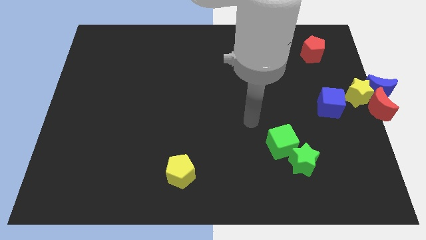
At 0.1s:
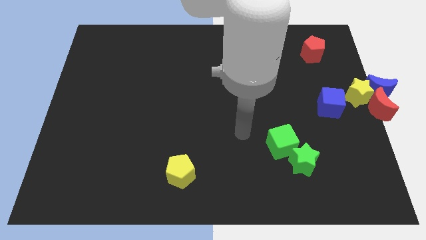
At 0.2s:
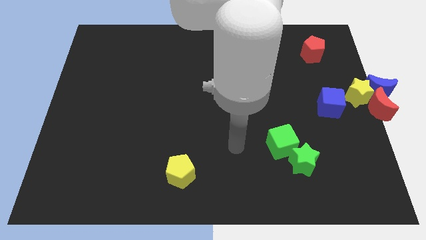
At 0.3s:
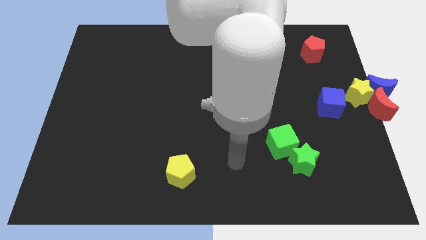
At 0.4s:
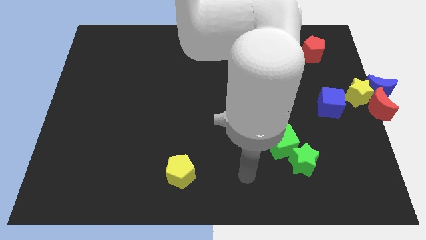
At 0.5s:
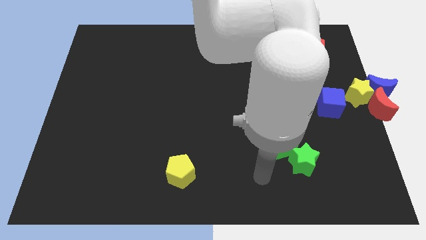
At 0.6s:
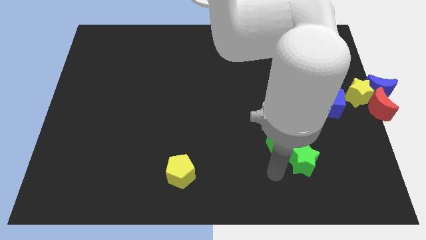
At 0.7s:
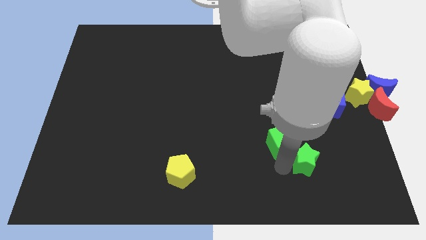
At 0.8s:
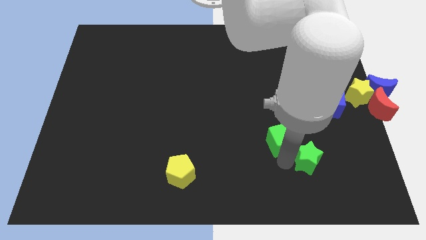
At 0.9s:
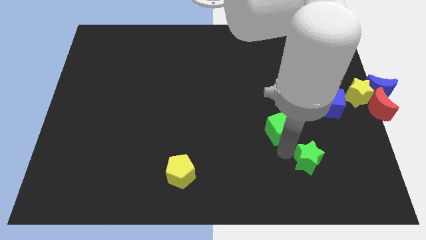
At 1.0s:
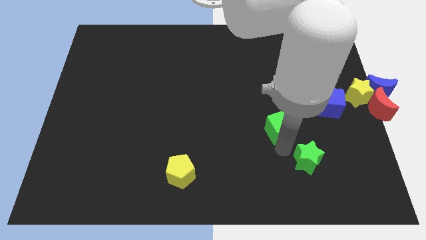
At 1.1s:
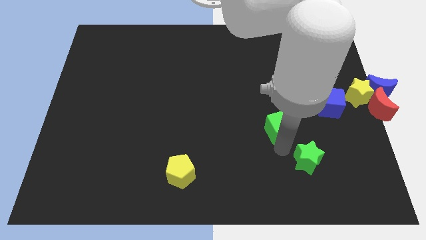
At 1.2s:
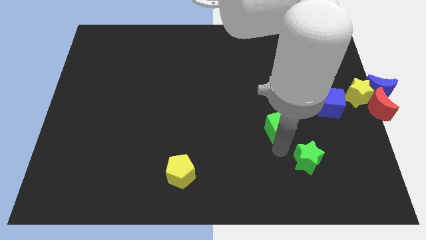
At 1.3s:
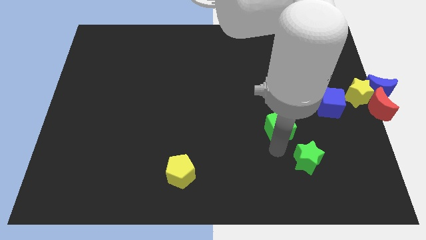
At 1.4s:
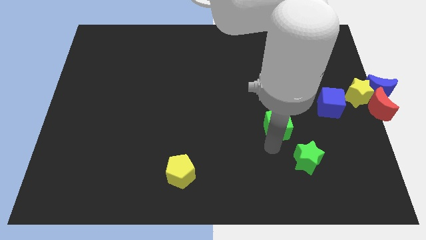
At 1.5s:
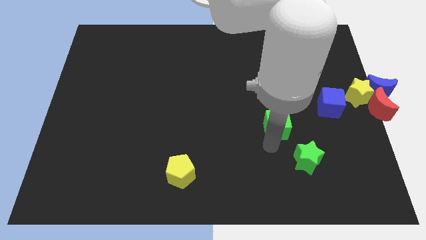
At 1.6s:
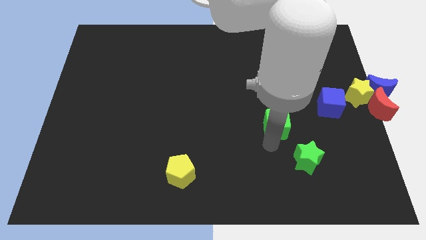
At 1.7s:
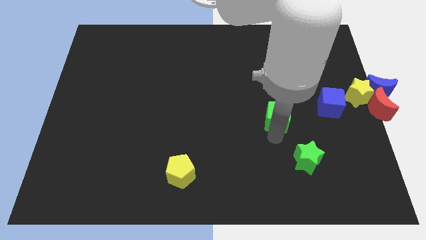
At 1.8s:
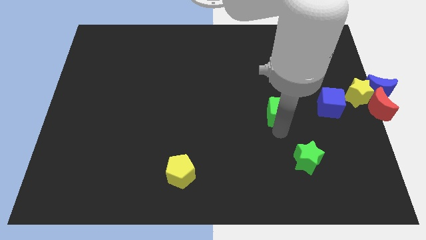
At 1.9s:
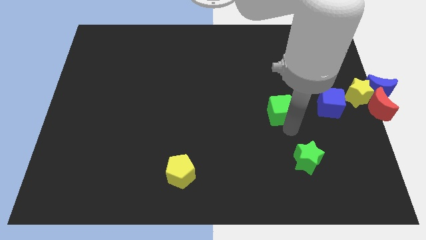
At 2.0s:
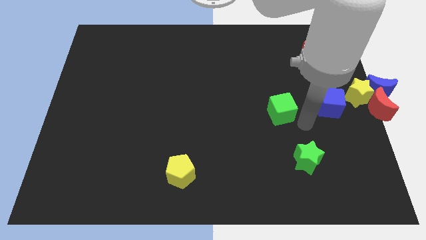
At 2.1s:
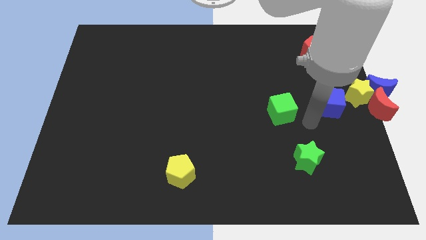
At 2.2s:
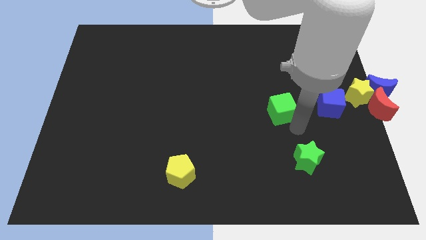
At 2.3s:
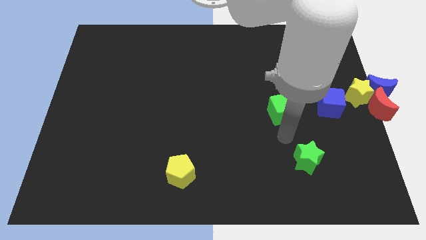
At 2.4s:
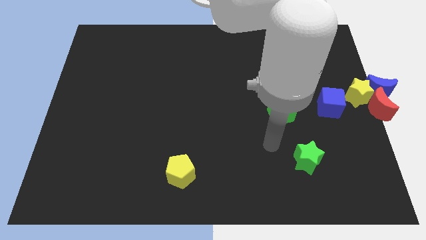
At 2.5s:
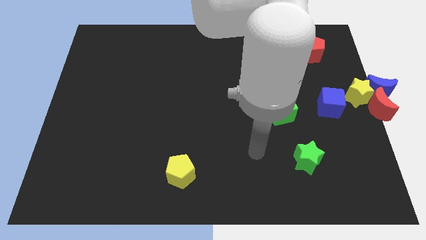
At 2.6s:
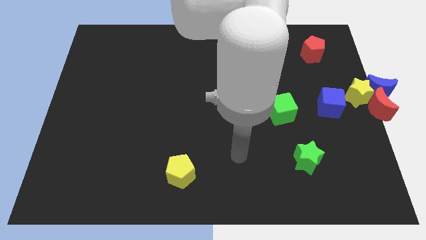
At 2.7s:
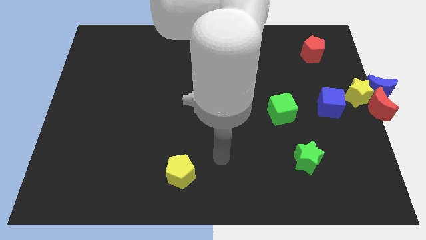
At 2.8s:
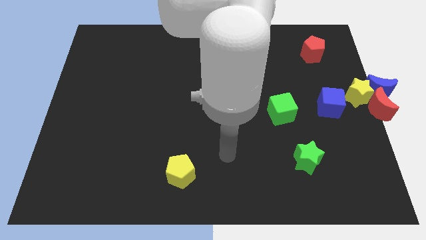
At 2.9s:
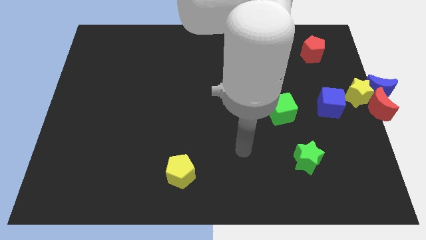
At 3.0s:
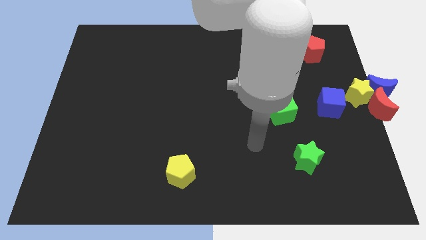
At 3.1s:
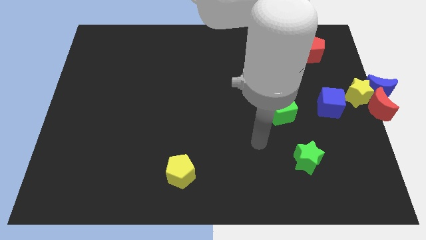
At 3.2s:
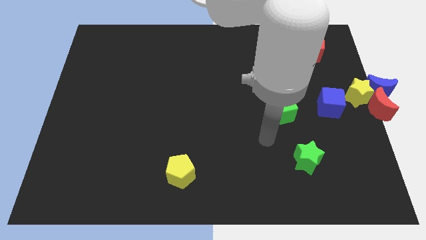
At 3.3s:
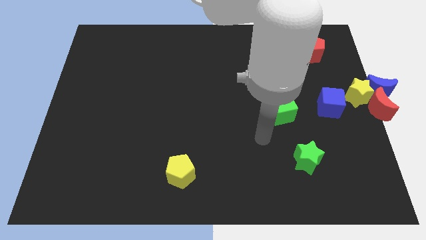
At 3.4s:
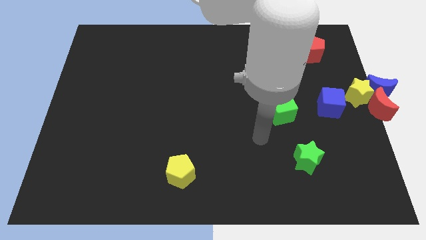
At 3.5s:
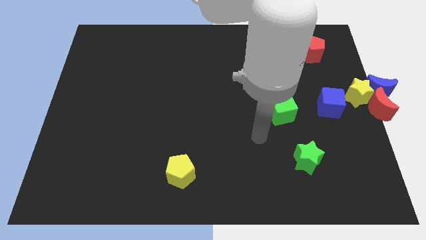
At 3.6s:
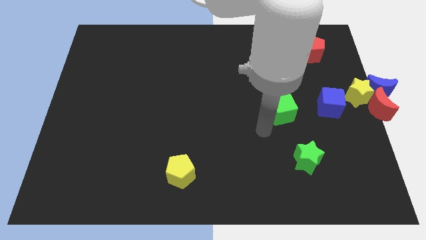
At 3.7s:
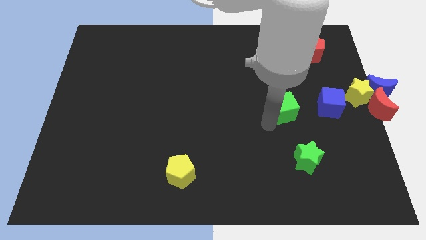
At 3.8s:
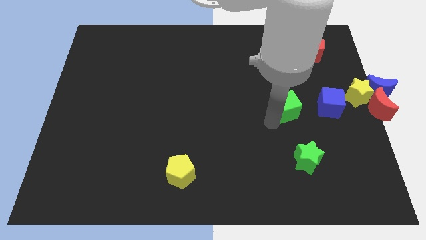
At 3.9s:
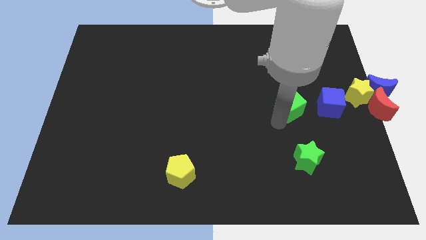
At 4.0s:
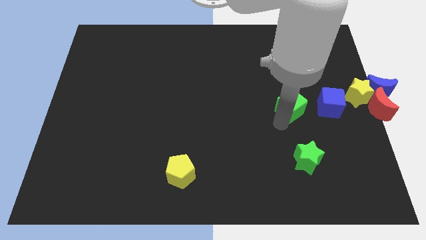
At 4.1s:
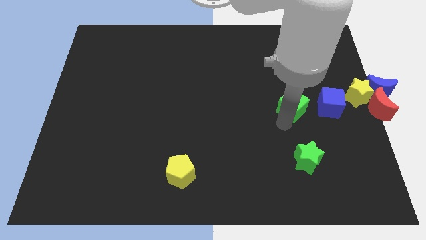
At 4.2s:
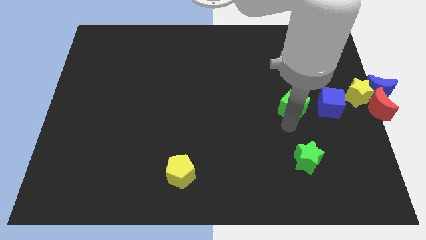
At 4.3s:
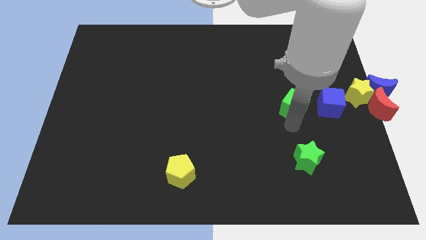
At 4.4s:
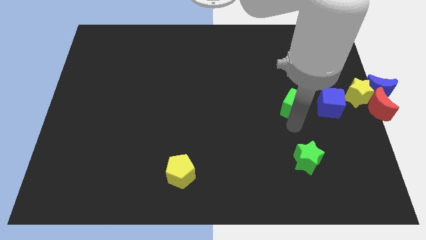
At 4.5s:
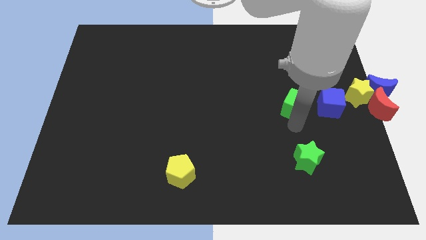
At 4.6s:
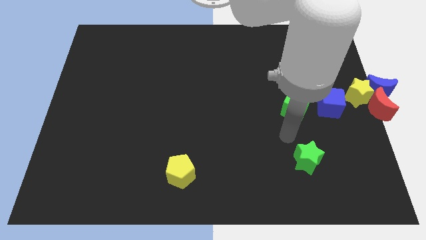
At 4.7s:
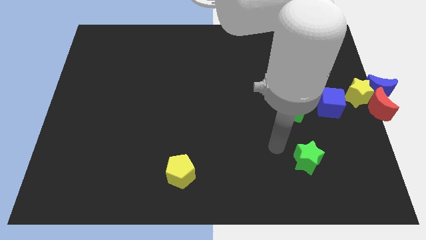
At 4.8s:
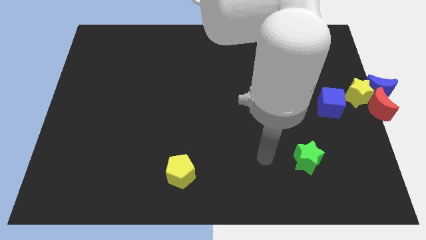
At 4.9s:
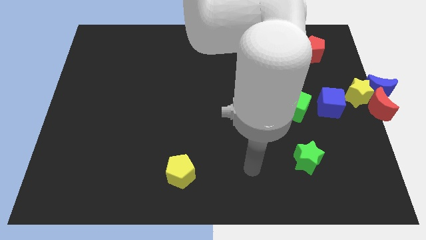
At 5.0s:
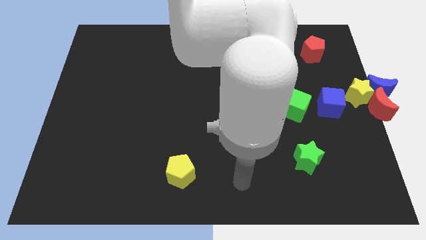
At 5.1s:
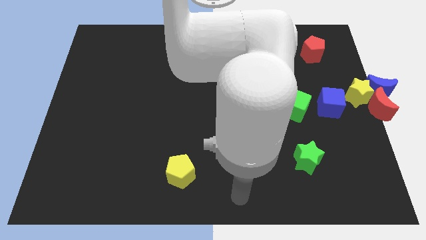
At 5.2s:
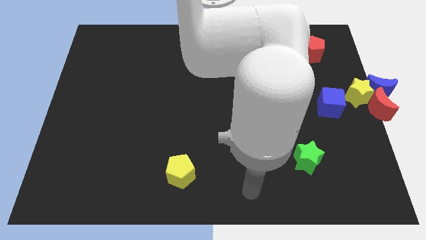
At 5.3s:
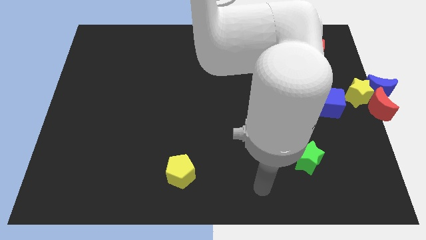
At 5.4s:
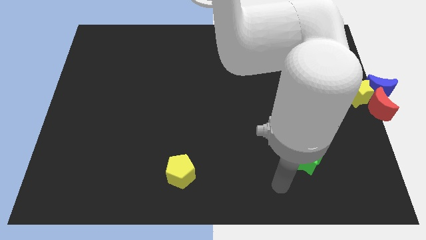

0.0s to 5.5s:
push the green cube to the left of the blue cube

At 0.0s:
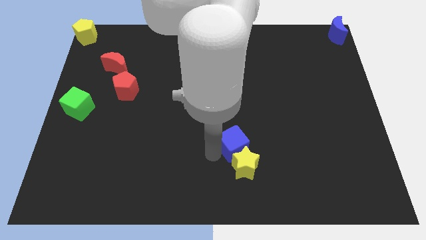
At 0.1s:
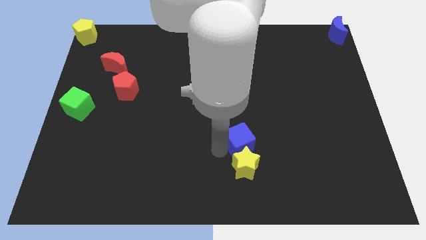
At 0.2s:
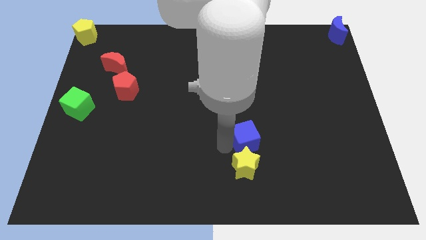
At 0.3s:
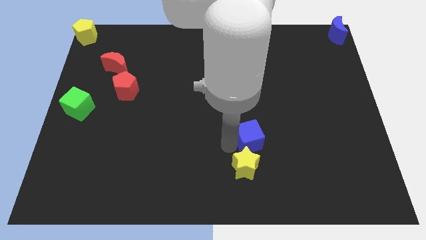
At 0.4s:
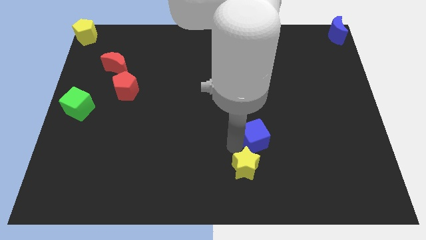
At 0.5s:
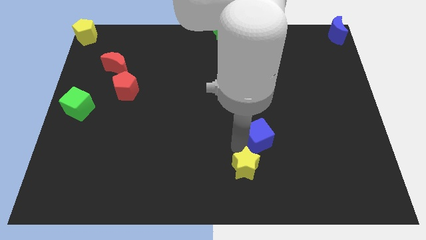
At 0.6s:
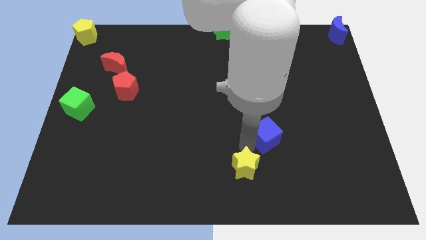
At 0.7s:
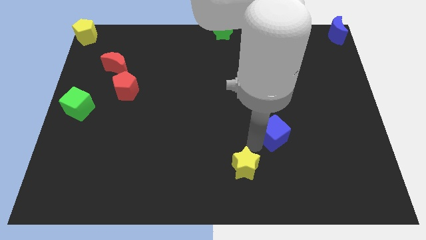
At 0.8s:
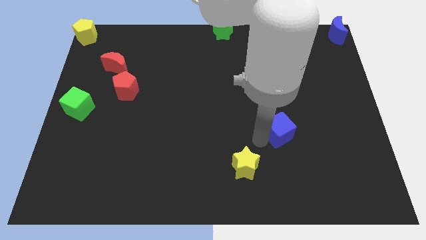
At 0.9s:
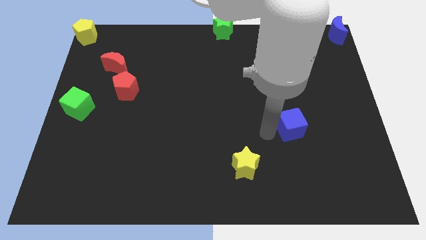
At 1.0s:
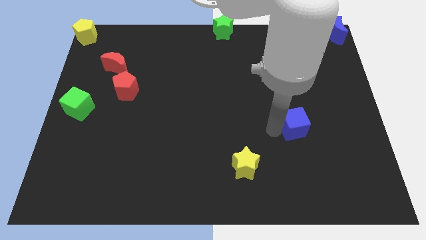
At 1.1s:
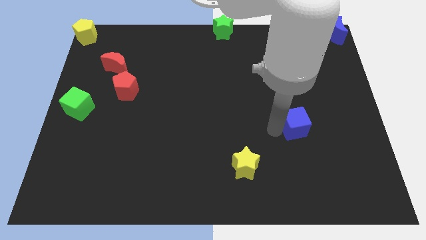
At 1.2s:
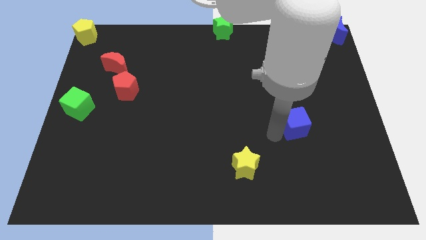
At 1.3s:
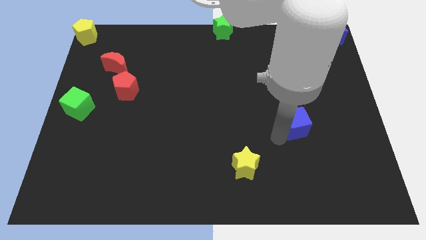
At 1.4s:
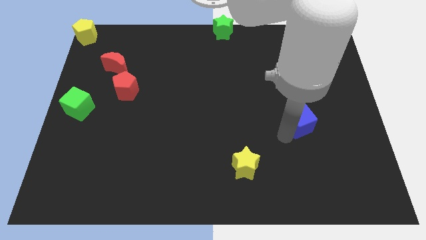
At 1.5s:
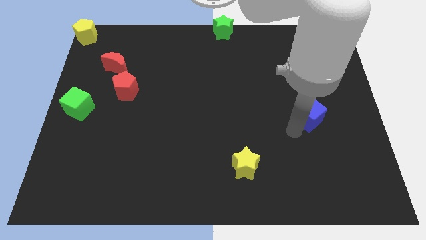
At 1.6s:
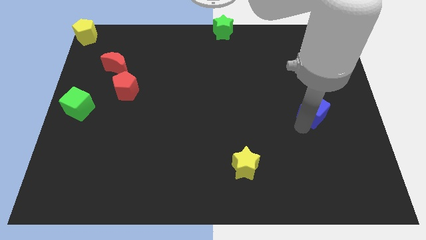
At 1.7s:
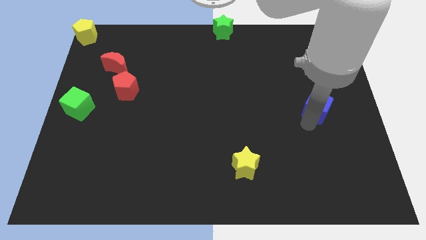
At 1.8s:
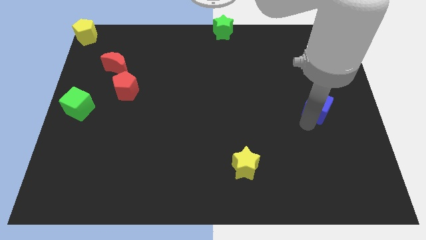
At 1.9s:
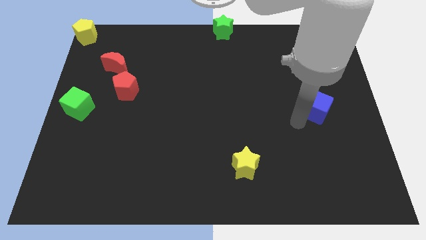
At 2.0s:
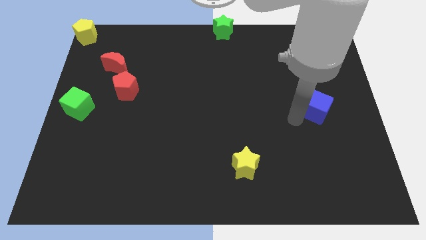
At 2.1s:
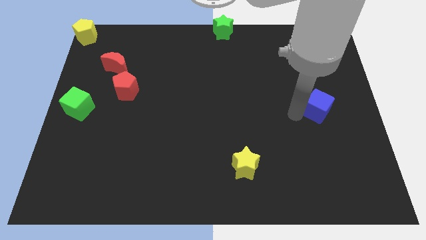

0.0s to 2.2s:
push the blue cube away from the yellow star

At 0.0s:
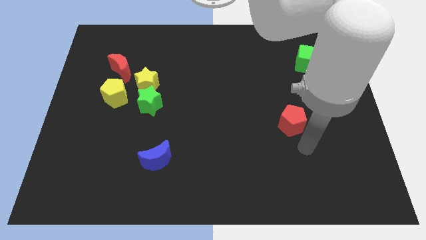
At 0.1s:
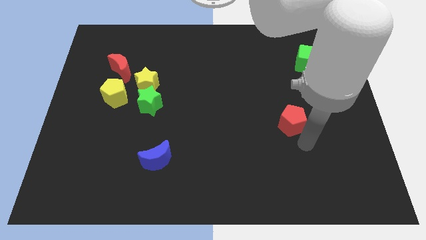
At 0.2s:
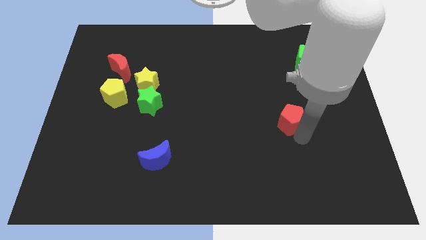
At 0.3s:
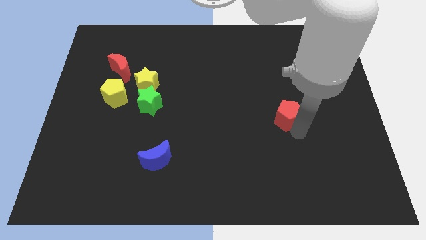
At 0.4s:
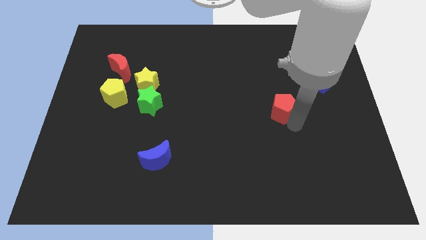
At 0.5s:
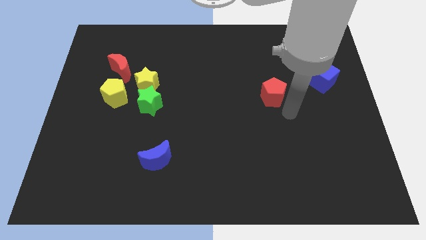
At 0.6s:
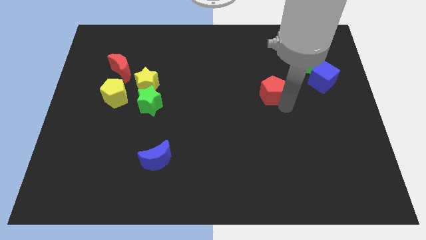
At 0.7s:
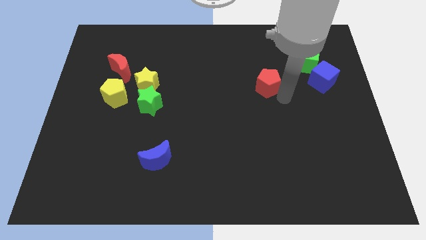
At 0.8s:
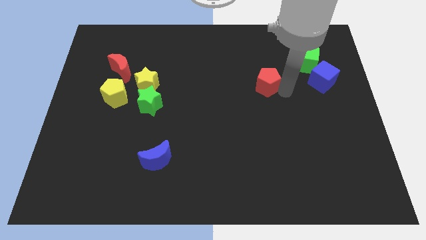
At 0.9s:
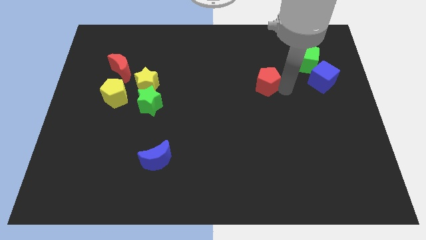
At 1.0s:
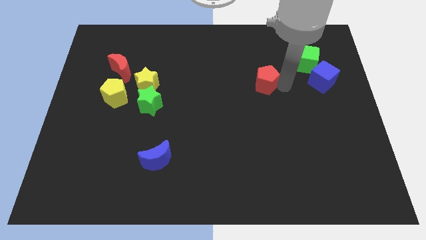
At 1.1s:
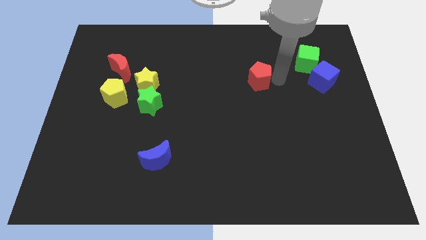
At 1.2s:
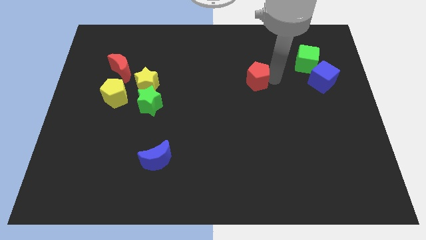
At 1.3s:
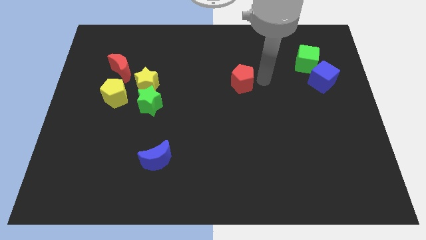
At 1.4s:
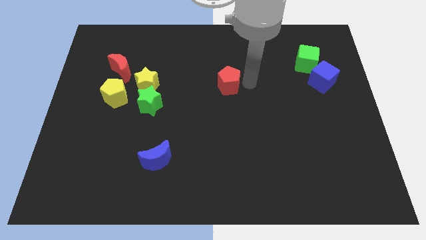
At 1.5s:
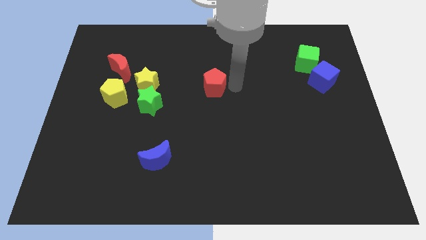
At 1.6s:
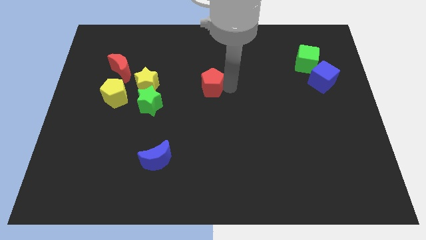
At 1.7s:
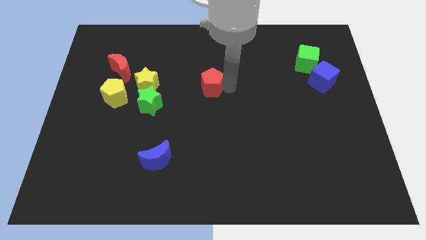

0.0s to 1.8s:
push red pentagon to the center of board
